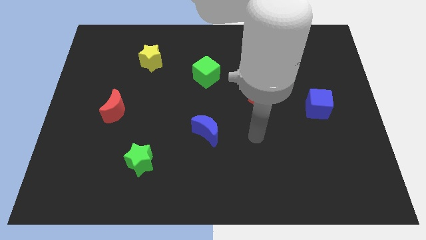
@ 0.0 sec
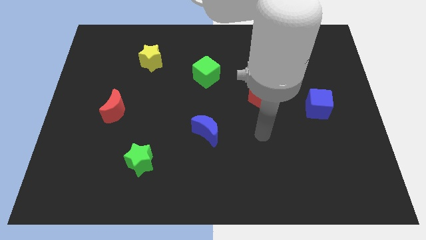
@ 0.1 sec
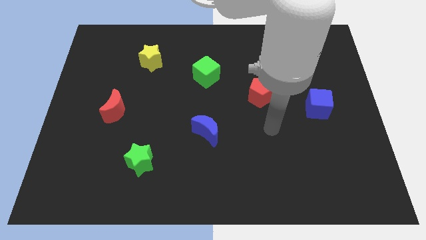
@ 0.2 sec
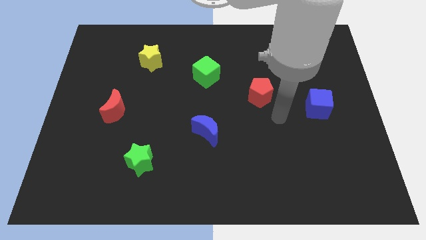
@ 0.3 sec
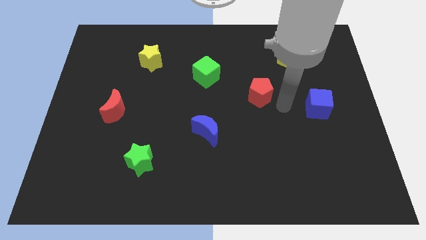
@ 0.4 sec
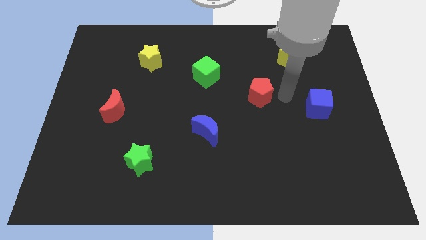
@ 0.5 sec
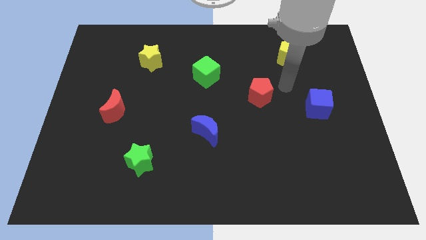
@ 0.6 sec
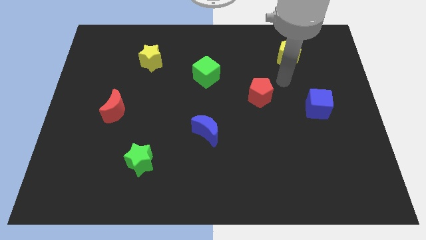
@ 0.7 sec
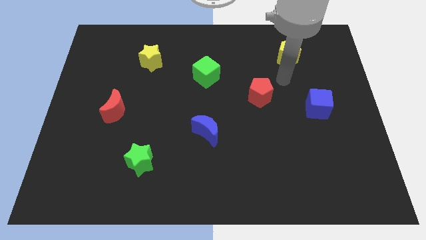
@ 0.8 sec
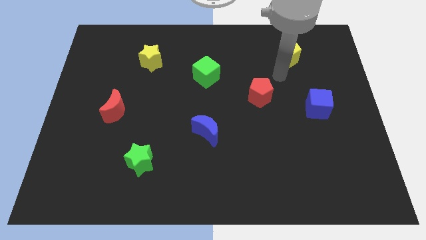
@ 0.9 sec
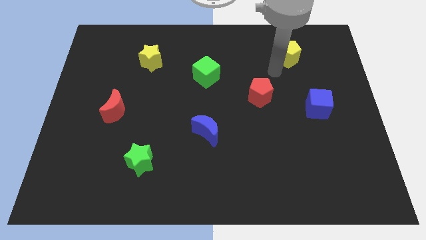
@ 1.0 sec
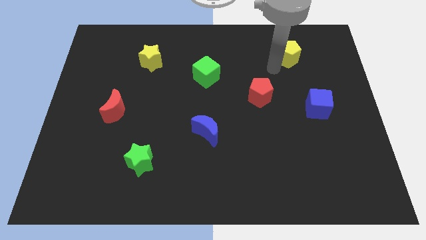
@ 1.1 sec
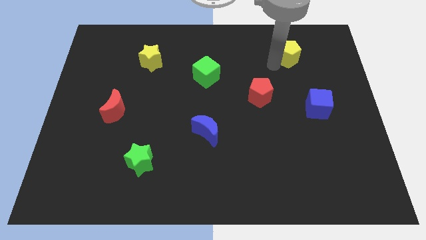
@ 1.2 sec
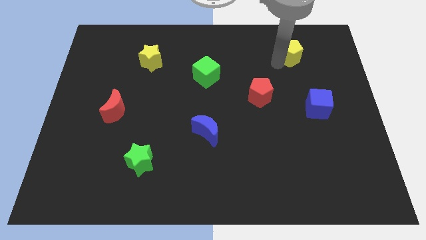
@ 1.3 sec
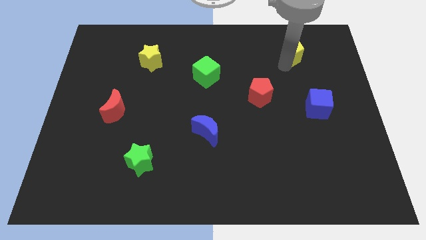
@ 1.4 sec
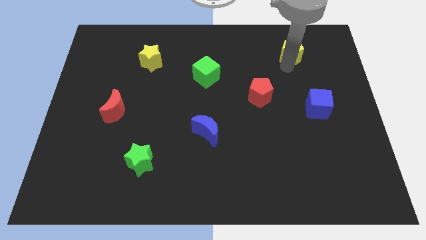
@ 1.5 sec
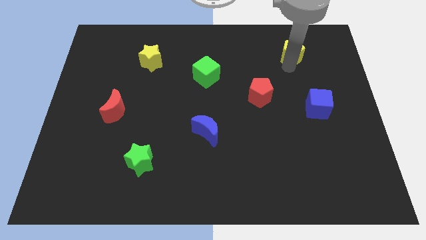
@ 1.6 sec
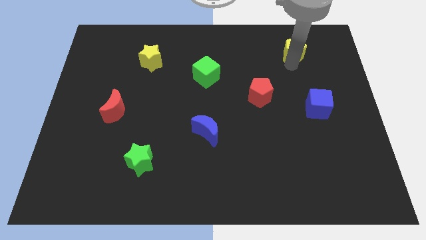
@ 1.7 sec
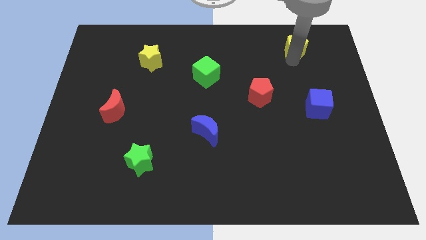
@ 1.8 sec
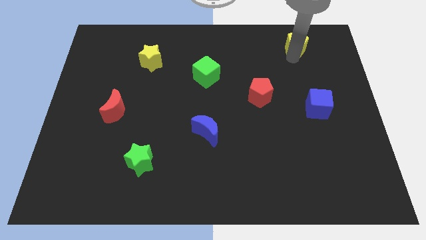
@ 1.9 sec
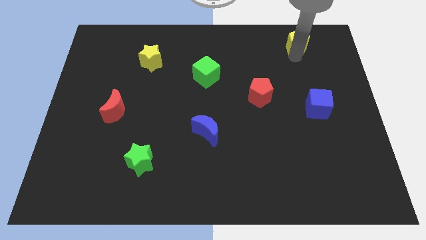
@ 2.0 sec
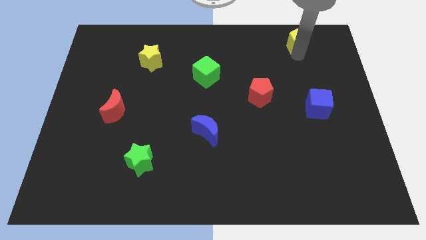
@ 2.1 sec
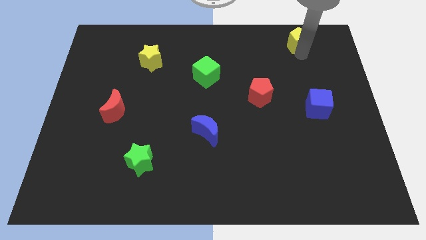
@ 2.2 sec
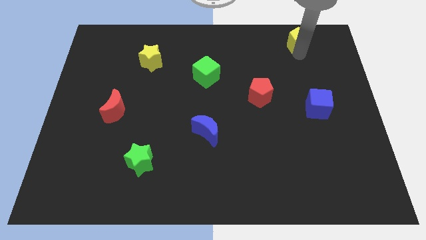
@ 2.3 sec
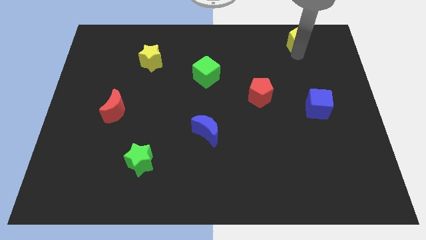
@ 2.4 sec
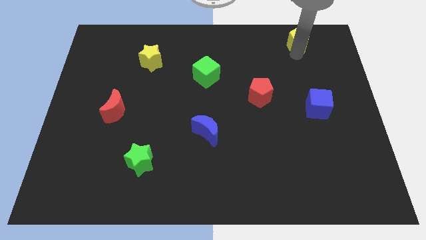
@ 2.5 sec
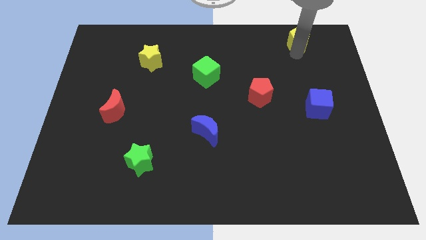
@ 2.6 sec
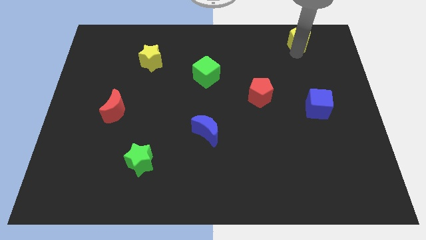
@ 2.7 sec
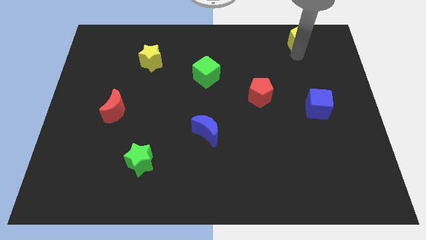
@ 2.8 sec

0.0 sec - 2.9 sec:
move the yellow pentagon slightly to the up

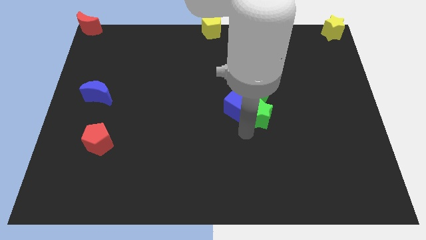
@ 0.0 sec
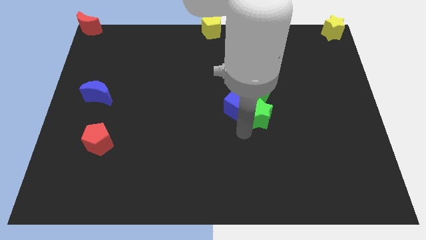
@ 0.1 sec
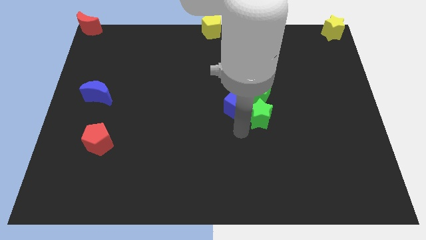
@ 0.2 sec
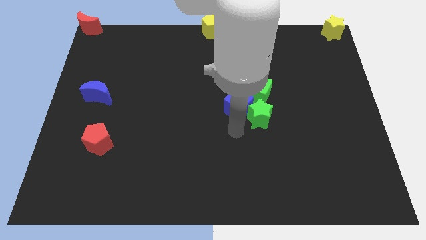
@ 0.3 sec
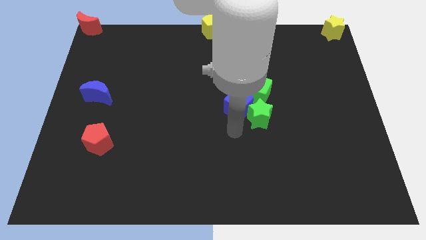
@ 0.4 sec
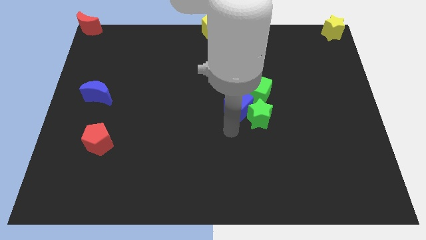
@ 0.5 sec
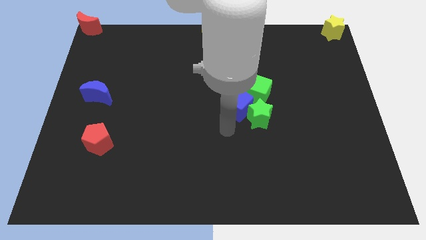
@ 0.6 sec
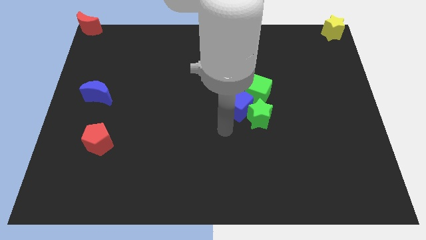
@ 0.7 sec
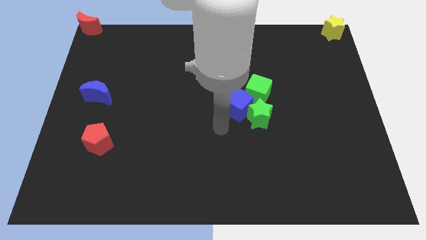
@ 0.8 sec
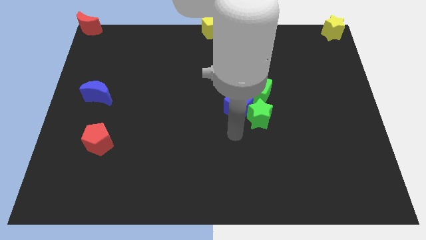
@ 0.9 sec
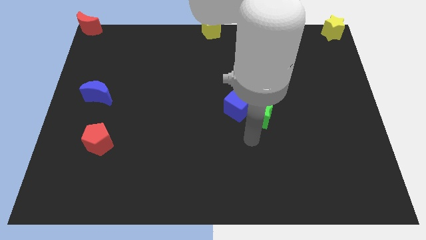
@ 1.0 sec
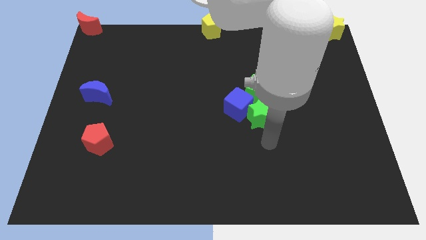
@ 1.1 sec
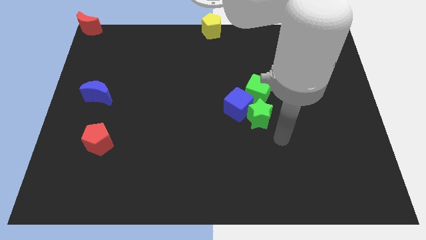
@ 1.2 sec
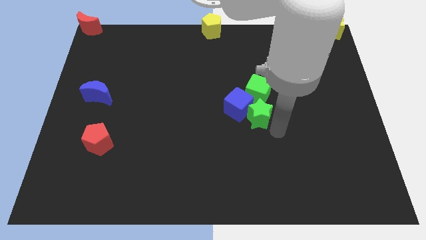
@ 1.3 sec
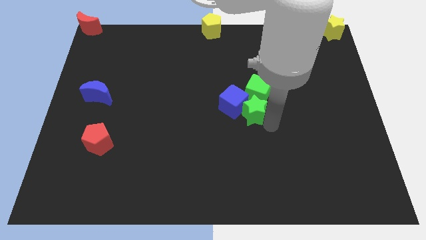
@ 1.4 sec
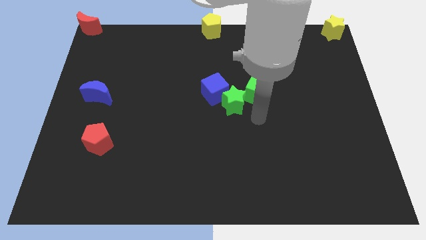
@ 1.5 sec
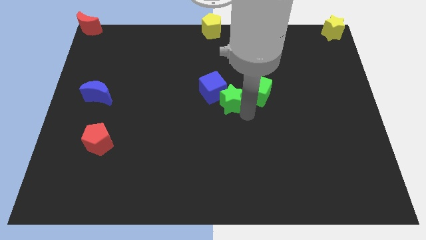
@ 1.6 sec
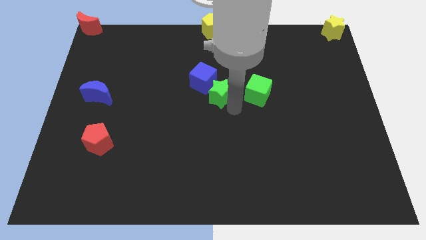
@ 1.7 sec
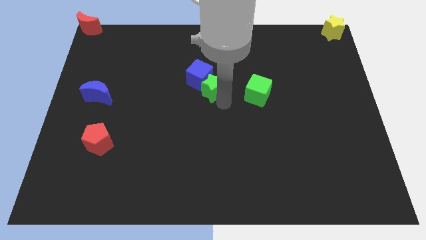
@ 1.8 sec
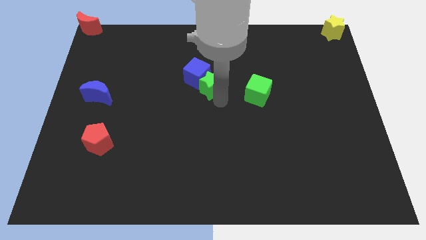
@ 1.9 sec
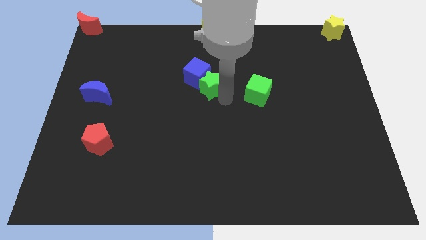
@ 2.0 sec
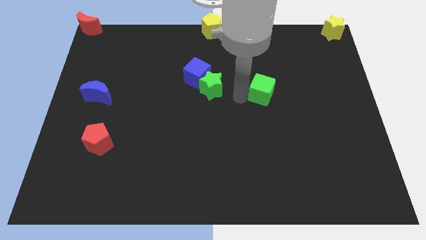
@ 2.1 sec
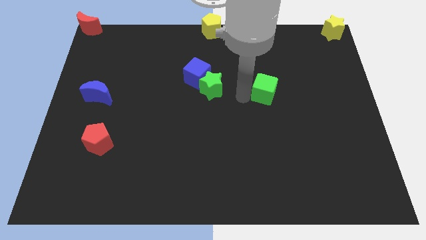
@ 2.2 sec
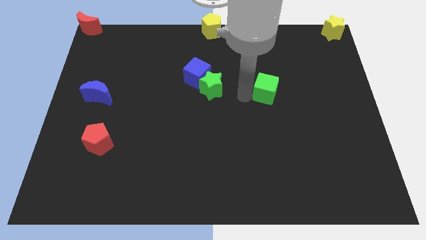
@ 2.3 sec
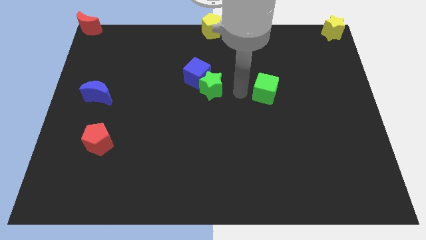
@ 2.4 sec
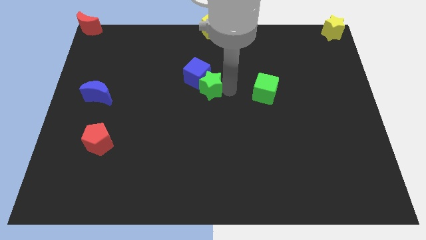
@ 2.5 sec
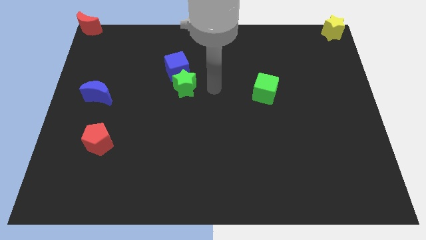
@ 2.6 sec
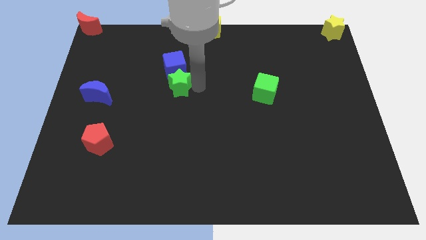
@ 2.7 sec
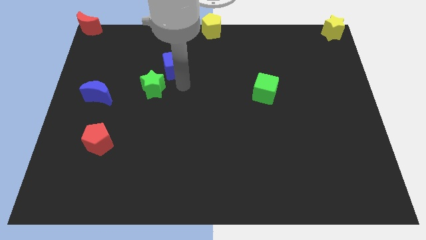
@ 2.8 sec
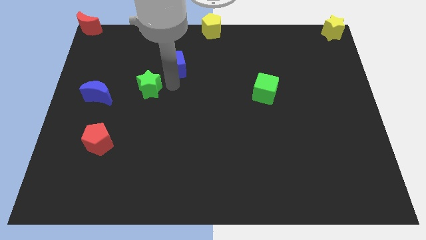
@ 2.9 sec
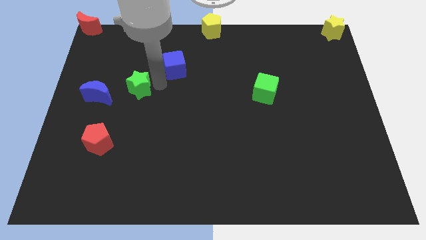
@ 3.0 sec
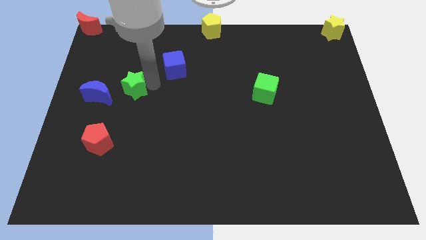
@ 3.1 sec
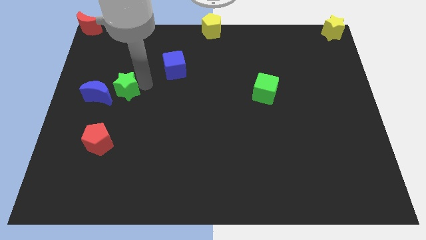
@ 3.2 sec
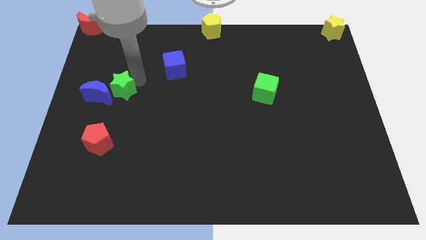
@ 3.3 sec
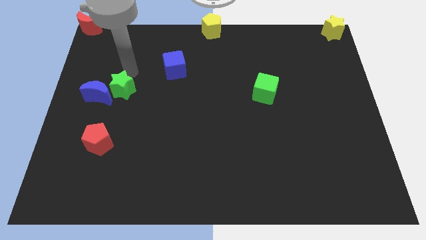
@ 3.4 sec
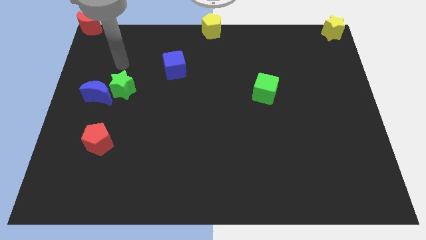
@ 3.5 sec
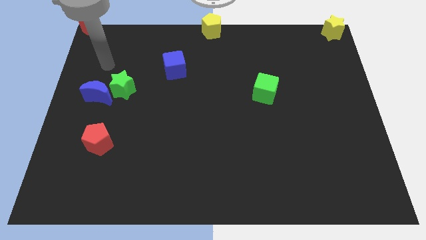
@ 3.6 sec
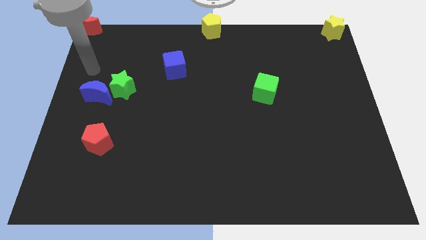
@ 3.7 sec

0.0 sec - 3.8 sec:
move the green star to the right of the blue crescent

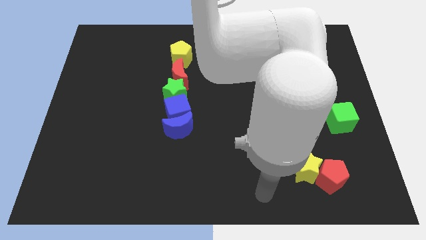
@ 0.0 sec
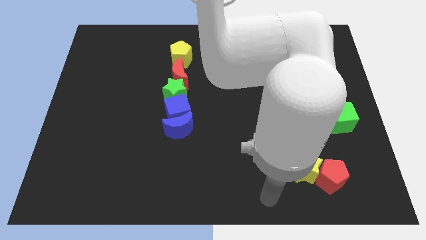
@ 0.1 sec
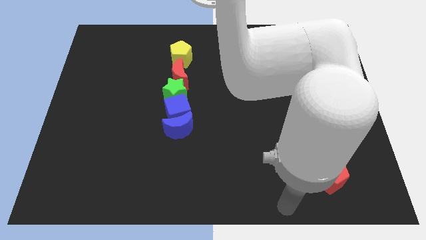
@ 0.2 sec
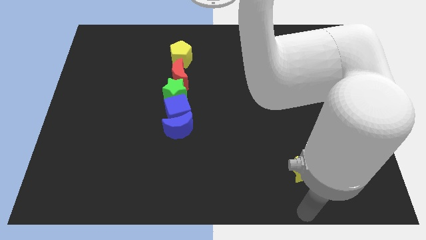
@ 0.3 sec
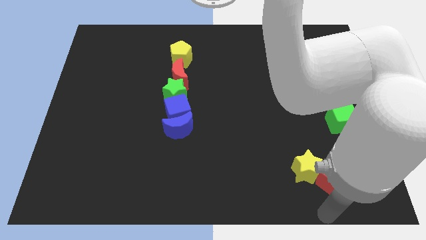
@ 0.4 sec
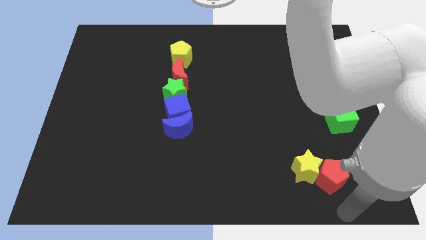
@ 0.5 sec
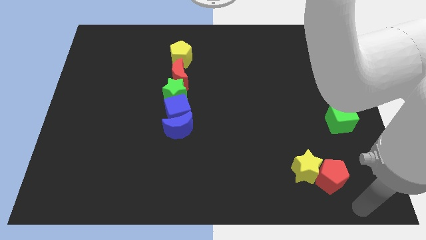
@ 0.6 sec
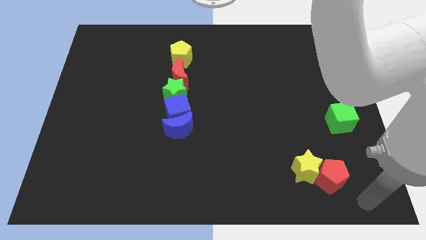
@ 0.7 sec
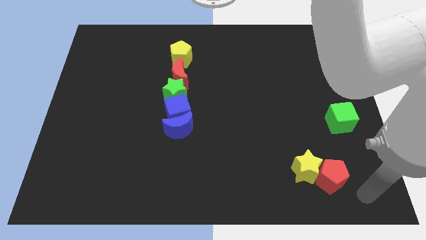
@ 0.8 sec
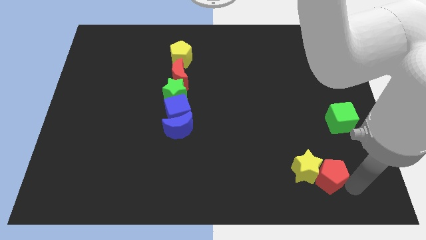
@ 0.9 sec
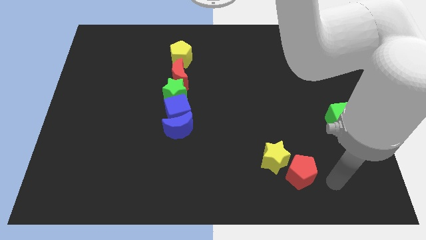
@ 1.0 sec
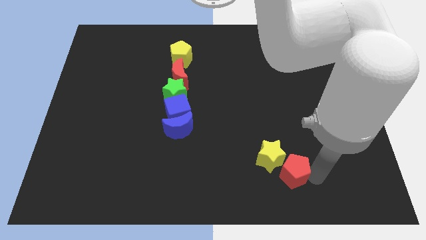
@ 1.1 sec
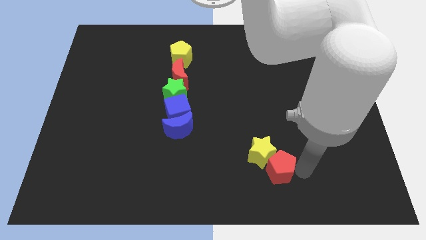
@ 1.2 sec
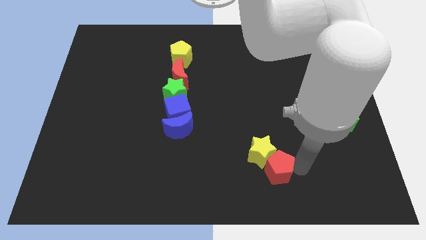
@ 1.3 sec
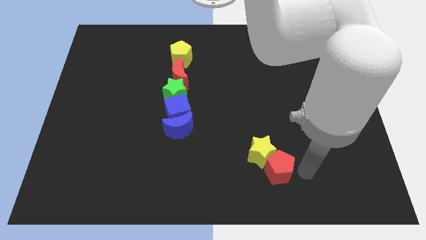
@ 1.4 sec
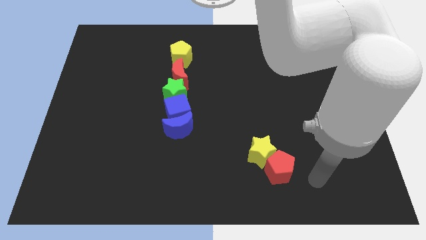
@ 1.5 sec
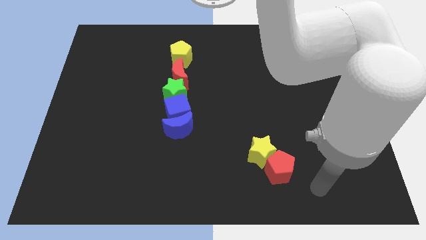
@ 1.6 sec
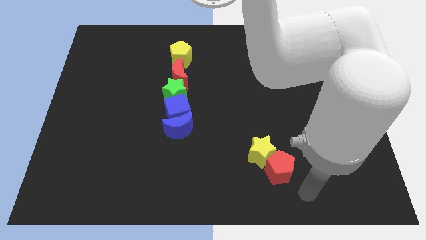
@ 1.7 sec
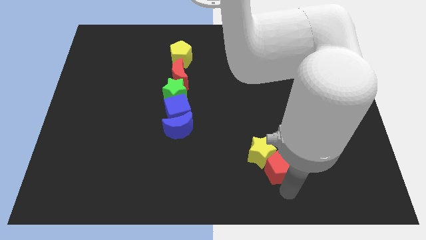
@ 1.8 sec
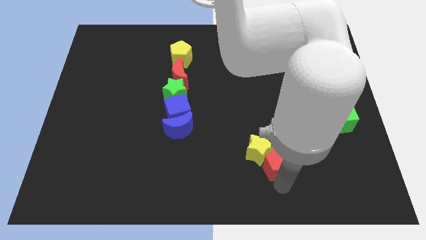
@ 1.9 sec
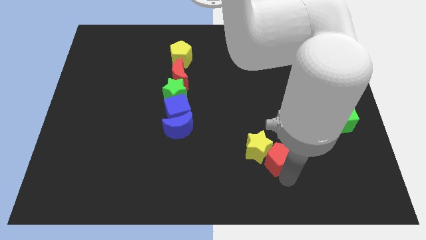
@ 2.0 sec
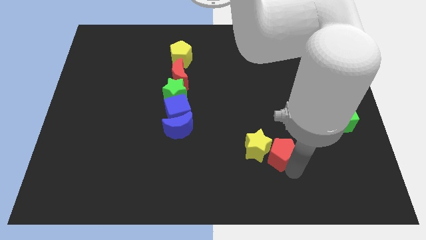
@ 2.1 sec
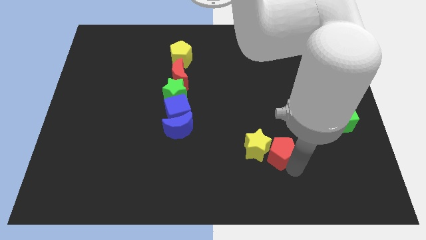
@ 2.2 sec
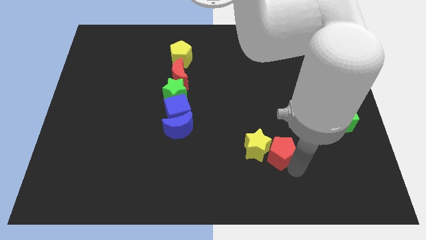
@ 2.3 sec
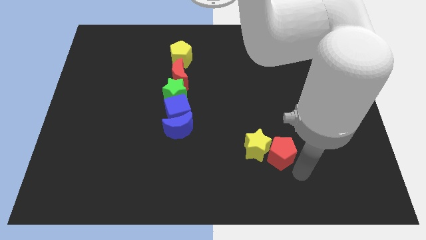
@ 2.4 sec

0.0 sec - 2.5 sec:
push the red pentagon and yellow star towards the center of the board
